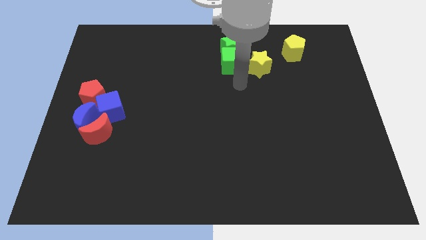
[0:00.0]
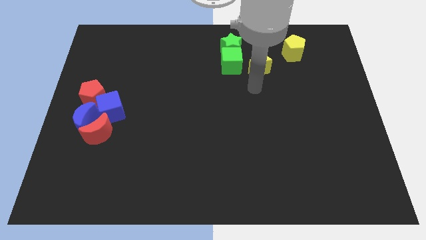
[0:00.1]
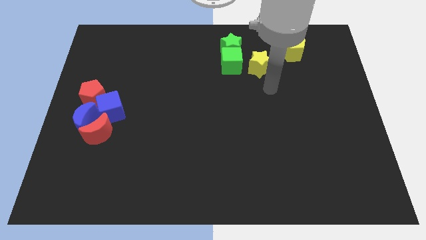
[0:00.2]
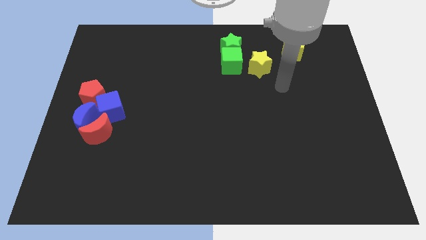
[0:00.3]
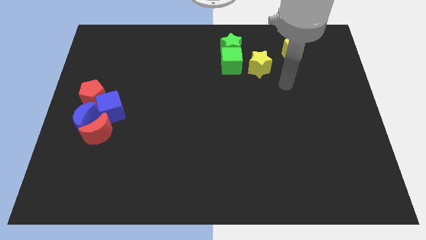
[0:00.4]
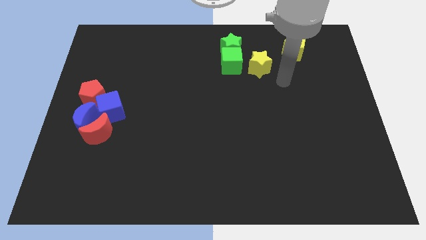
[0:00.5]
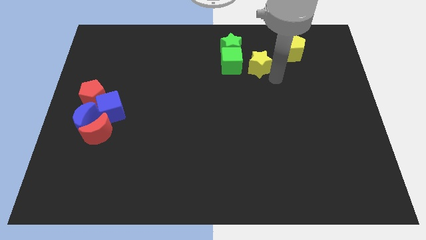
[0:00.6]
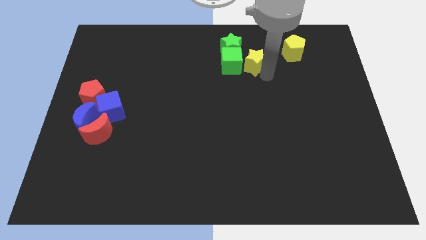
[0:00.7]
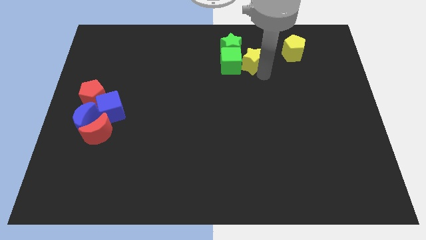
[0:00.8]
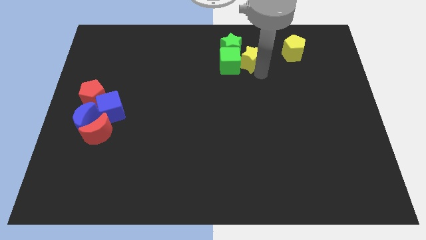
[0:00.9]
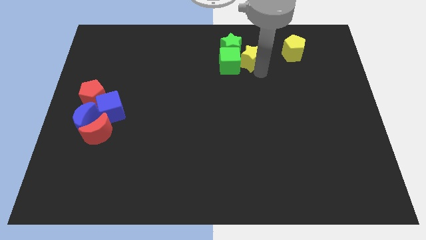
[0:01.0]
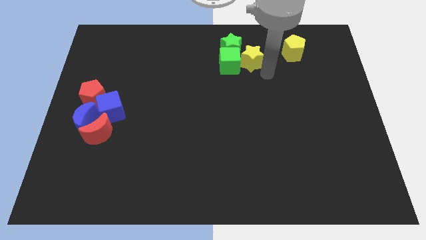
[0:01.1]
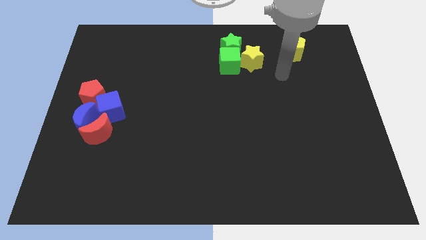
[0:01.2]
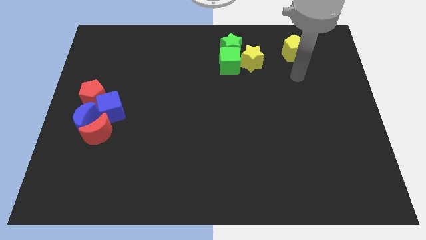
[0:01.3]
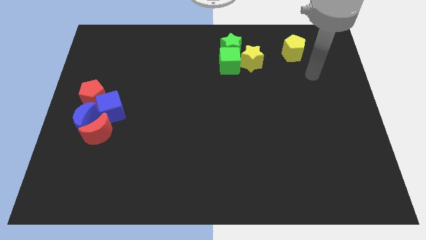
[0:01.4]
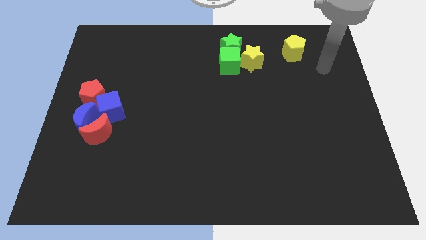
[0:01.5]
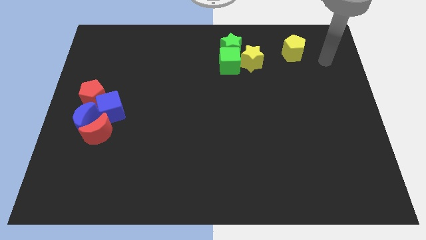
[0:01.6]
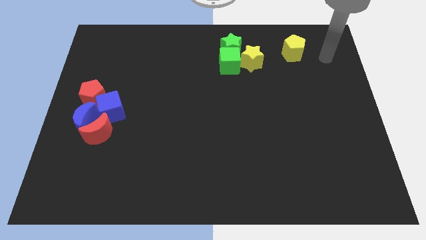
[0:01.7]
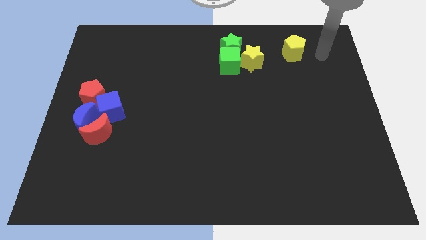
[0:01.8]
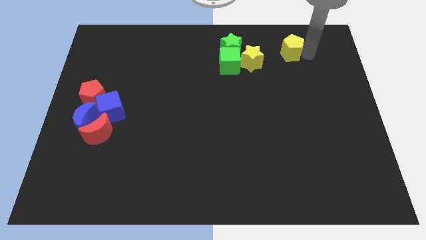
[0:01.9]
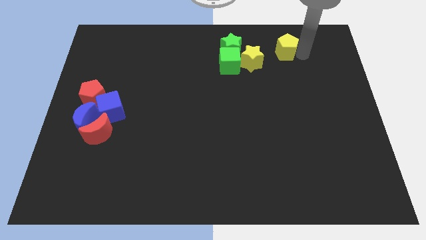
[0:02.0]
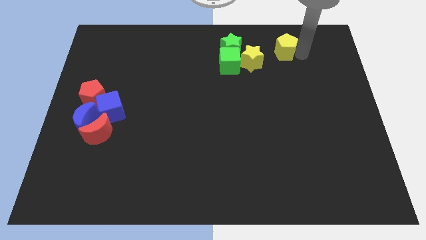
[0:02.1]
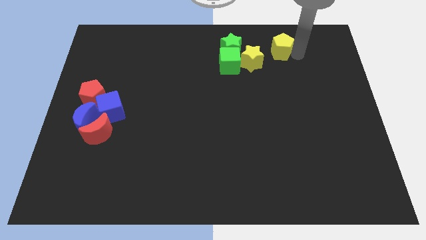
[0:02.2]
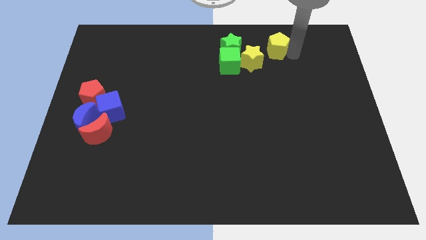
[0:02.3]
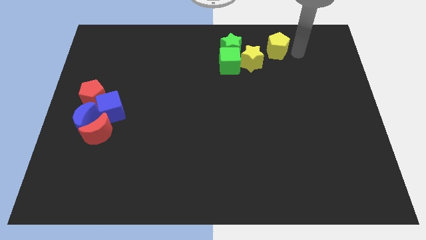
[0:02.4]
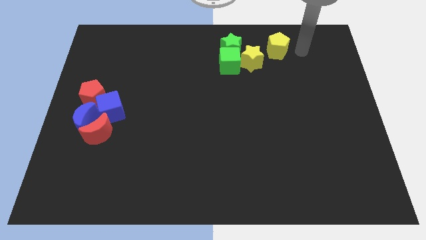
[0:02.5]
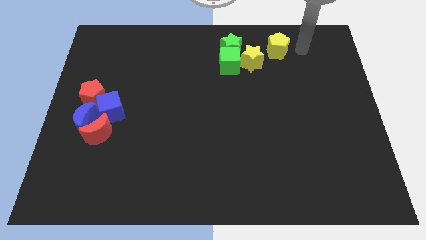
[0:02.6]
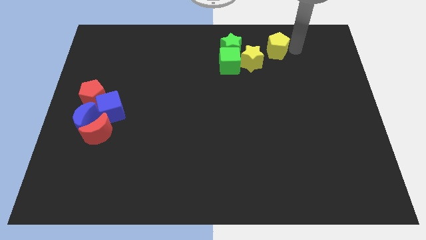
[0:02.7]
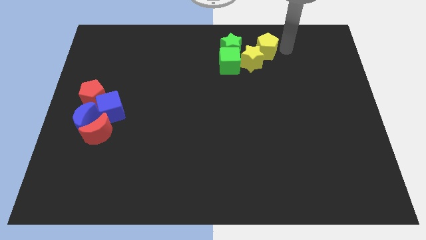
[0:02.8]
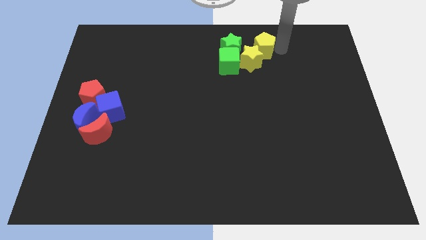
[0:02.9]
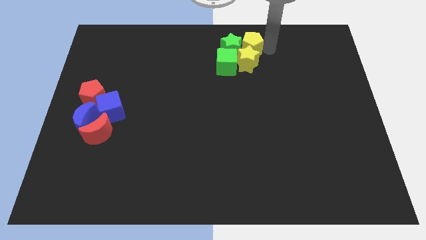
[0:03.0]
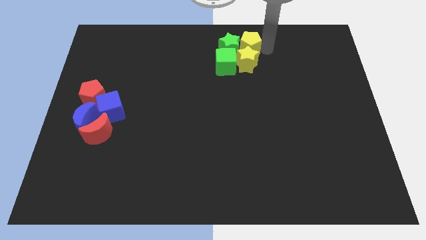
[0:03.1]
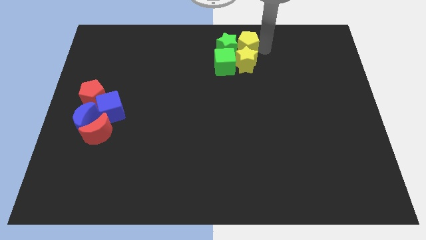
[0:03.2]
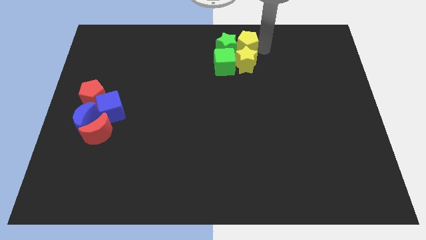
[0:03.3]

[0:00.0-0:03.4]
line the yellow blocks up vertically at the top center of the board

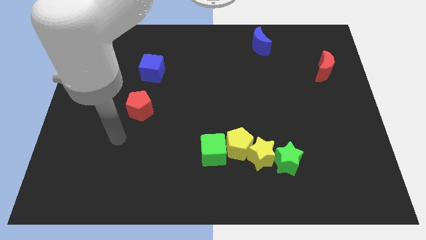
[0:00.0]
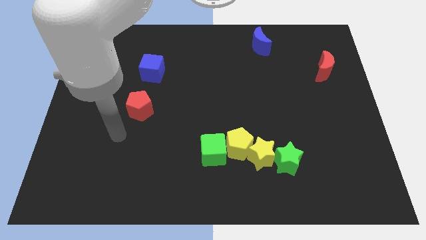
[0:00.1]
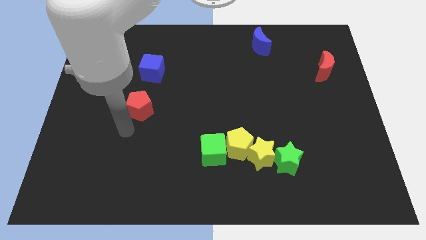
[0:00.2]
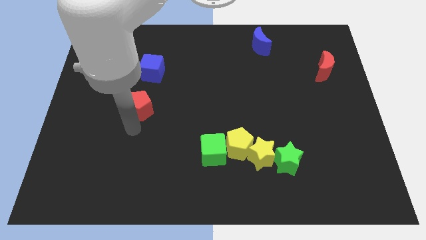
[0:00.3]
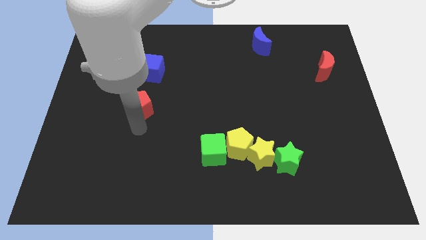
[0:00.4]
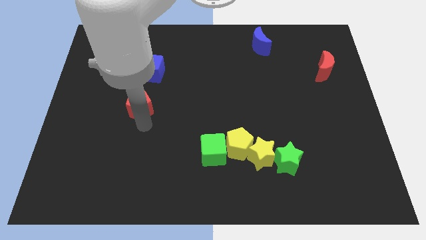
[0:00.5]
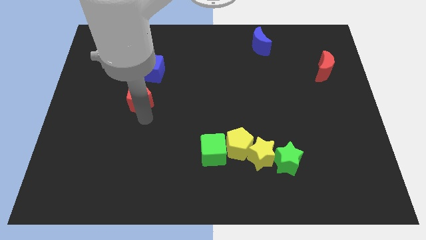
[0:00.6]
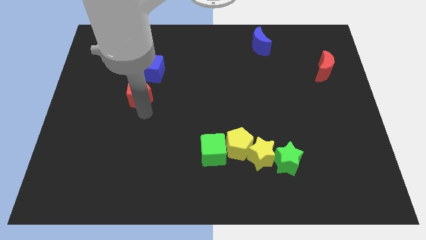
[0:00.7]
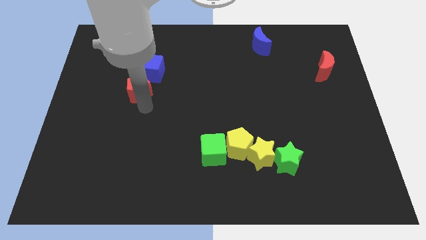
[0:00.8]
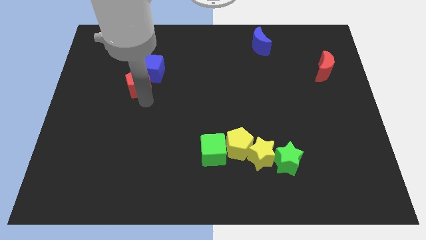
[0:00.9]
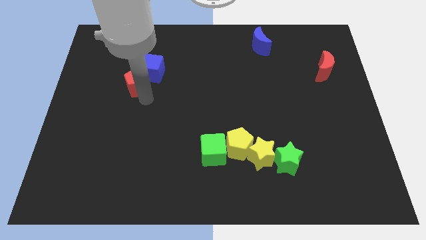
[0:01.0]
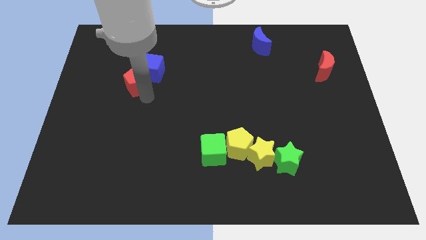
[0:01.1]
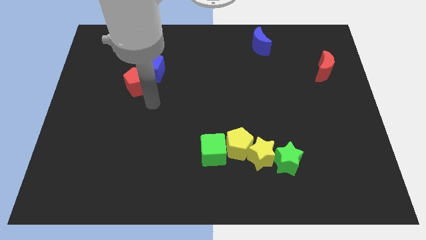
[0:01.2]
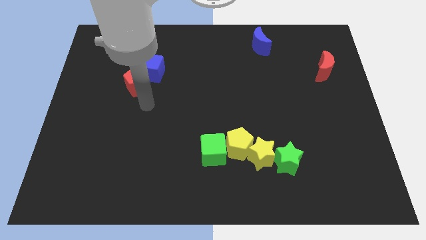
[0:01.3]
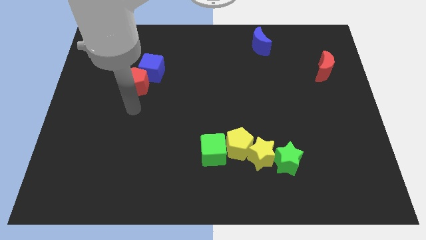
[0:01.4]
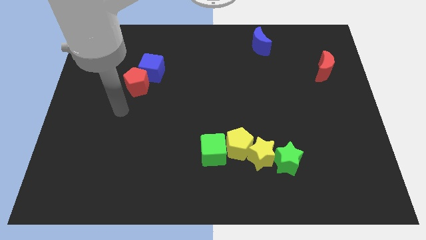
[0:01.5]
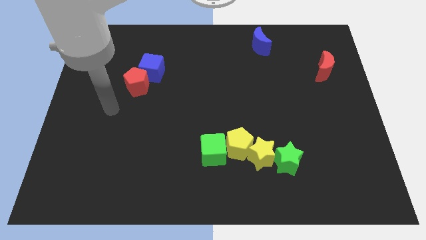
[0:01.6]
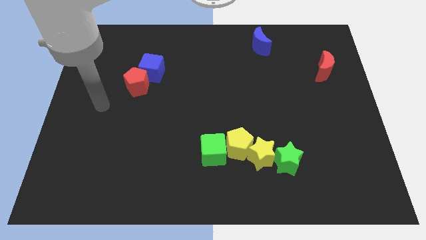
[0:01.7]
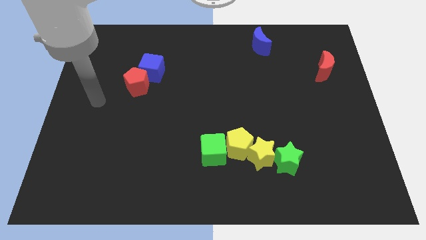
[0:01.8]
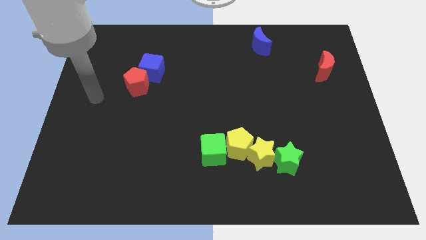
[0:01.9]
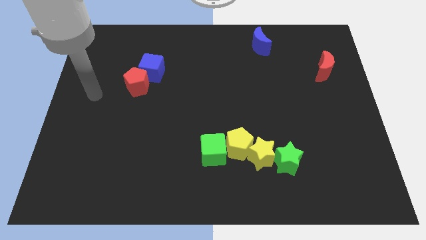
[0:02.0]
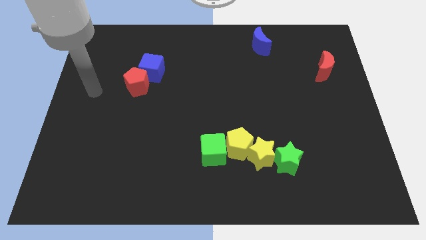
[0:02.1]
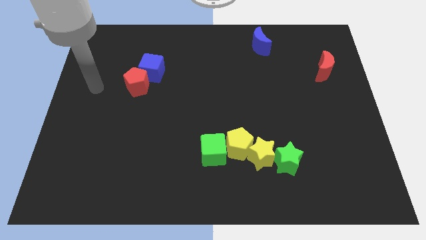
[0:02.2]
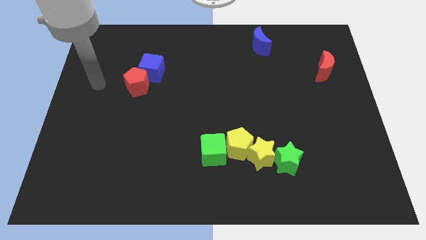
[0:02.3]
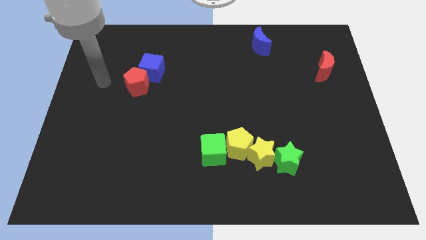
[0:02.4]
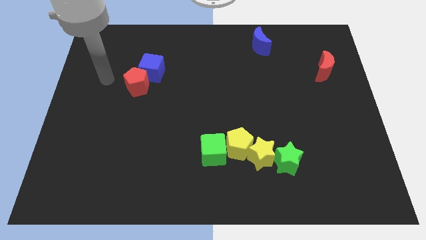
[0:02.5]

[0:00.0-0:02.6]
put the red pentagon and blue cube together

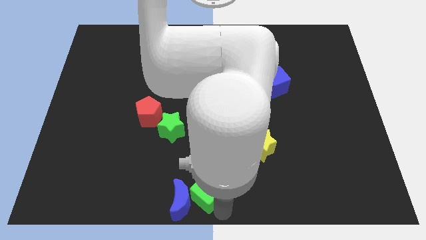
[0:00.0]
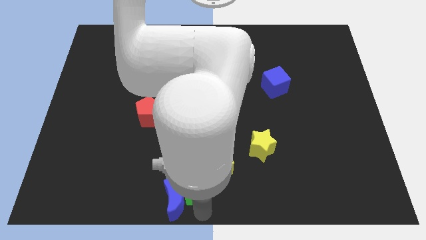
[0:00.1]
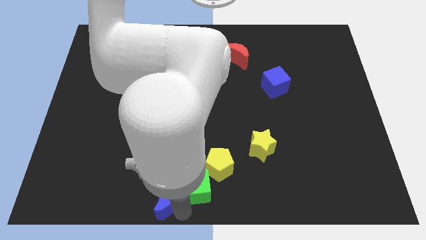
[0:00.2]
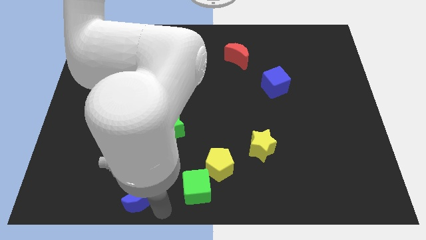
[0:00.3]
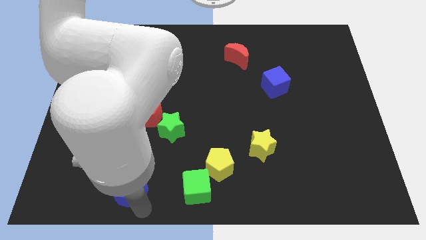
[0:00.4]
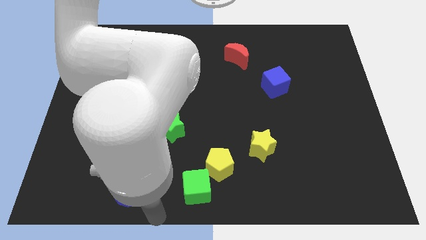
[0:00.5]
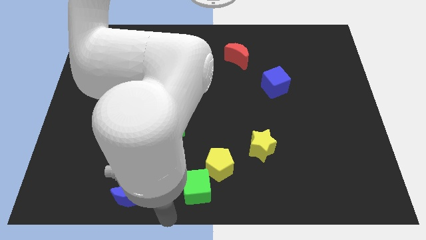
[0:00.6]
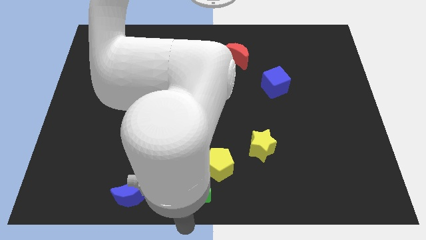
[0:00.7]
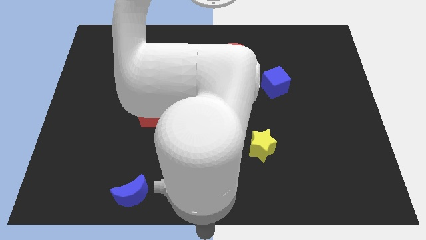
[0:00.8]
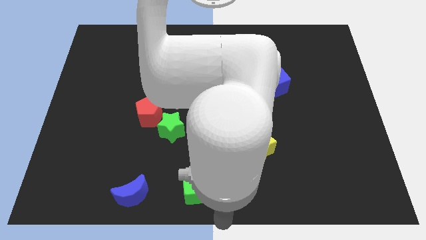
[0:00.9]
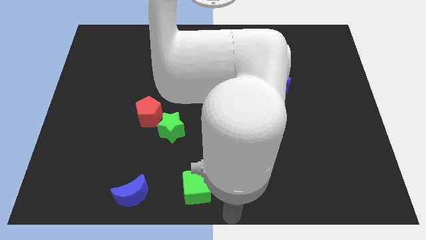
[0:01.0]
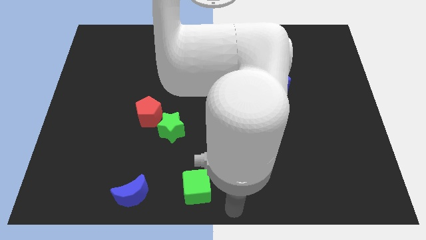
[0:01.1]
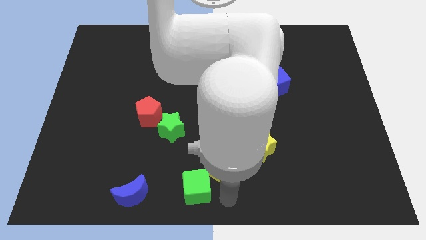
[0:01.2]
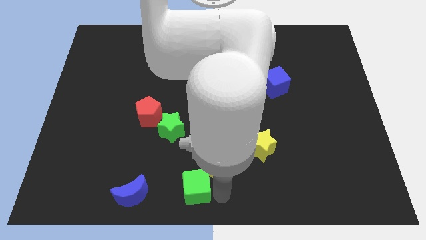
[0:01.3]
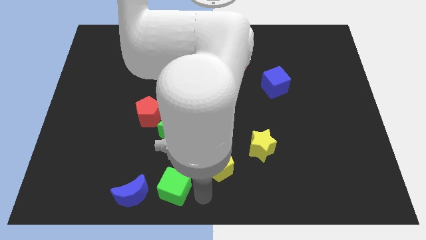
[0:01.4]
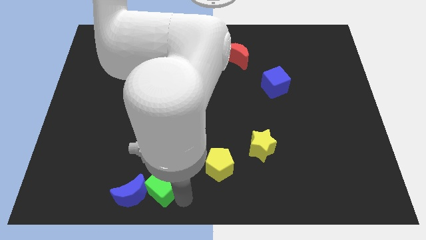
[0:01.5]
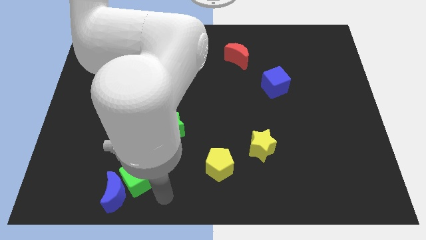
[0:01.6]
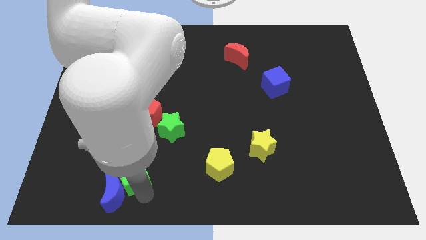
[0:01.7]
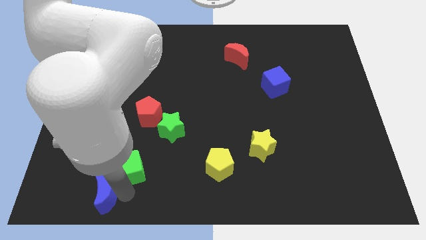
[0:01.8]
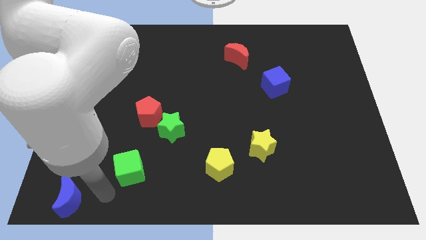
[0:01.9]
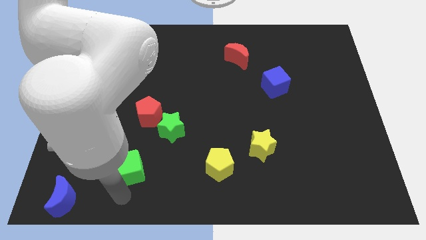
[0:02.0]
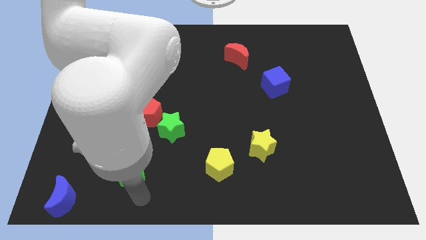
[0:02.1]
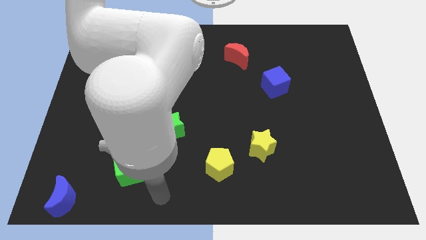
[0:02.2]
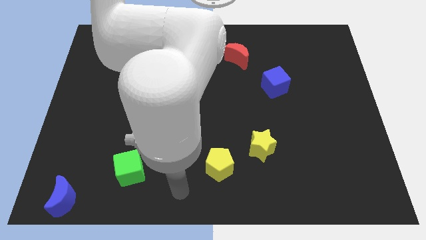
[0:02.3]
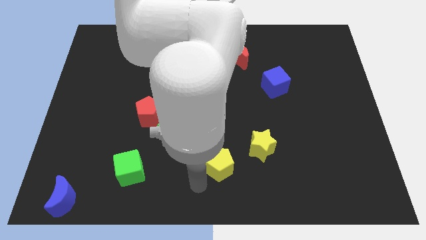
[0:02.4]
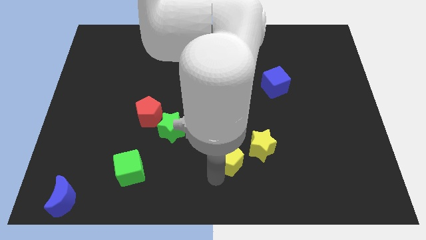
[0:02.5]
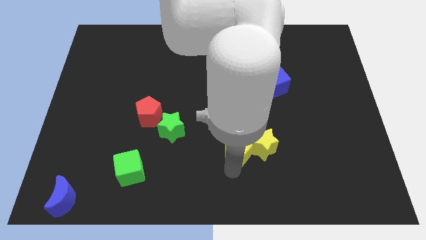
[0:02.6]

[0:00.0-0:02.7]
move blue crescent to the bottom left corner of the board

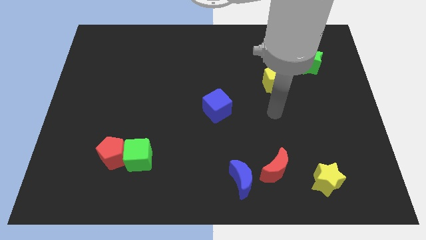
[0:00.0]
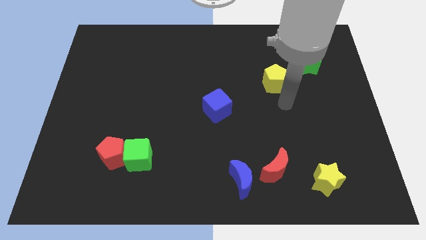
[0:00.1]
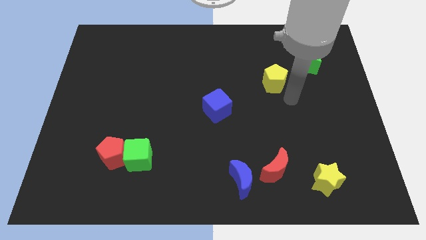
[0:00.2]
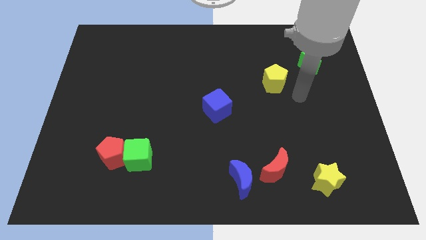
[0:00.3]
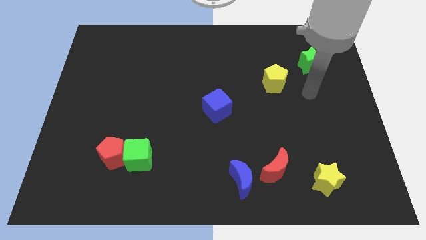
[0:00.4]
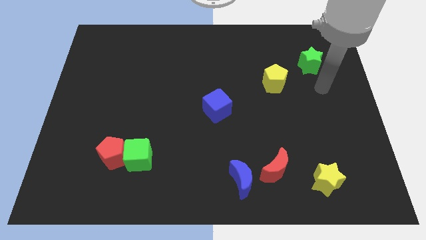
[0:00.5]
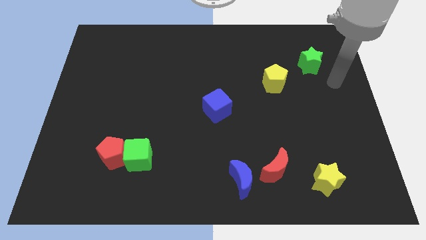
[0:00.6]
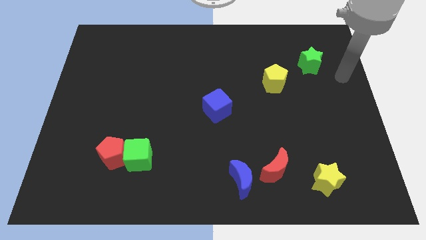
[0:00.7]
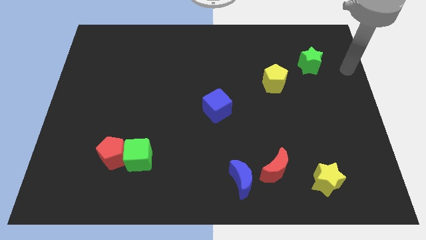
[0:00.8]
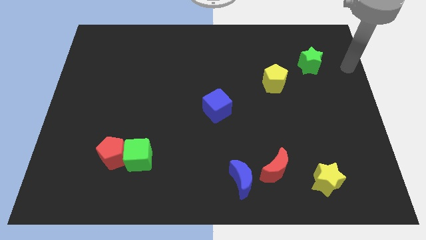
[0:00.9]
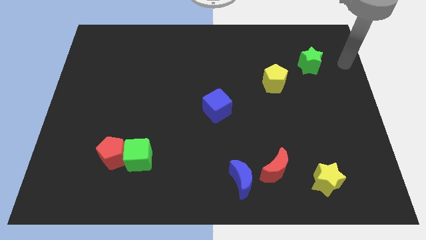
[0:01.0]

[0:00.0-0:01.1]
place your hand at the right of the green star
